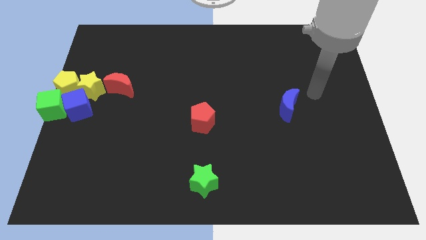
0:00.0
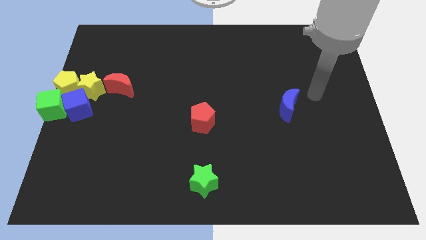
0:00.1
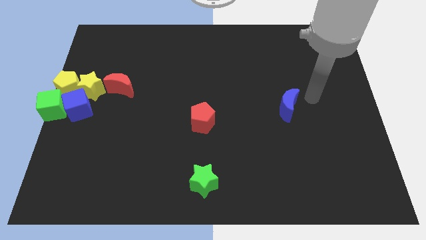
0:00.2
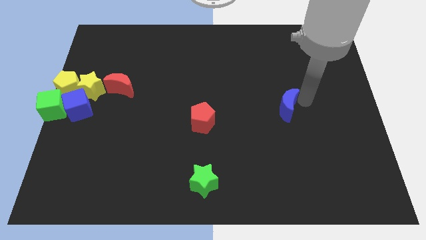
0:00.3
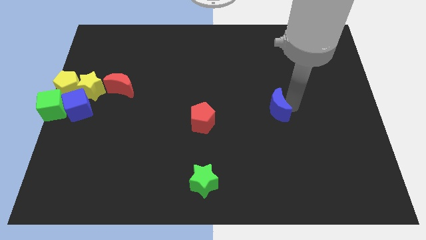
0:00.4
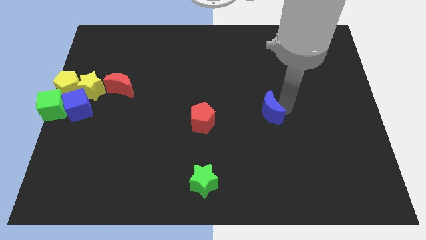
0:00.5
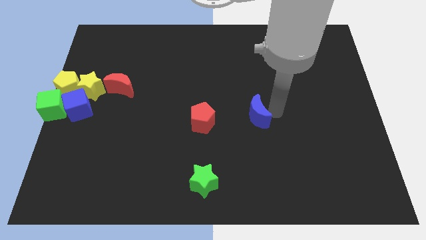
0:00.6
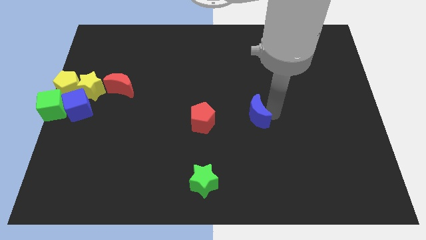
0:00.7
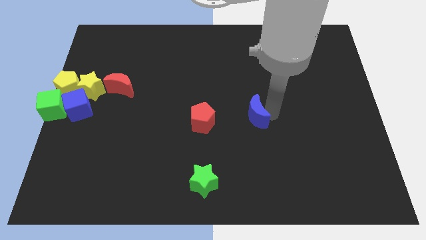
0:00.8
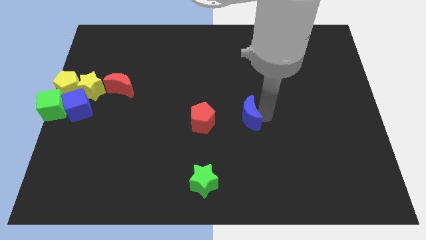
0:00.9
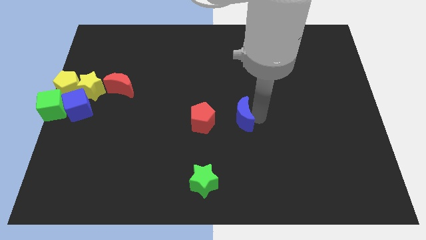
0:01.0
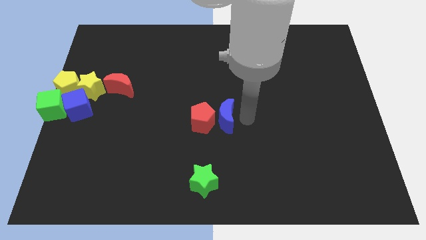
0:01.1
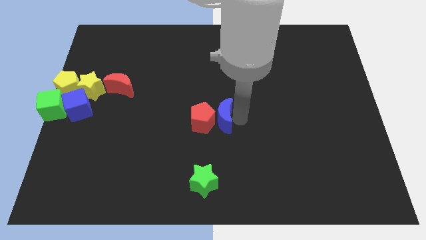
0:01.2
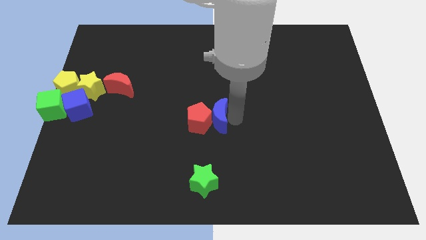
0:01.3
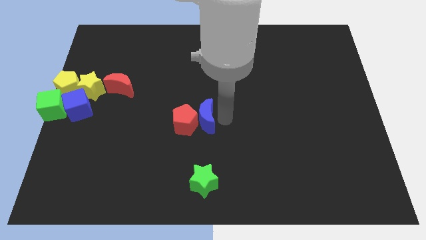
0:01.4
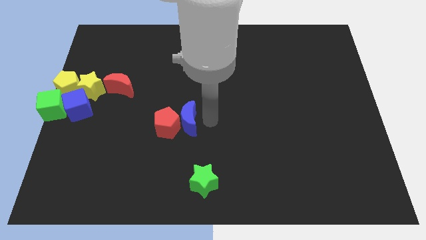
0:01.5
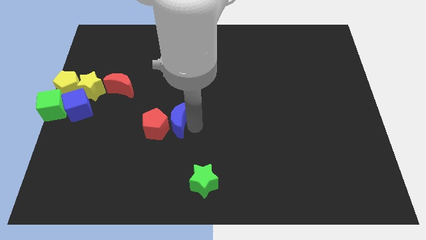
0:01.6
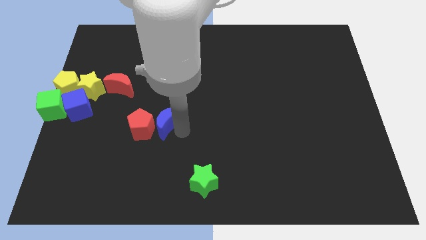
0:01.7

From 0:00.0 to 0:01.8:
move the blue moon into the red pentagon

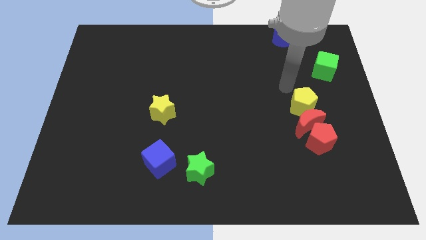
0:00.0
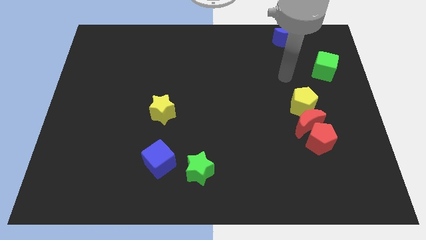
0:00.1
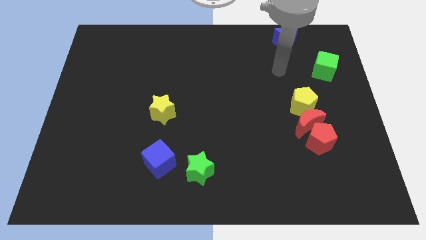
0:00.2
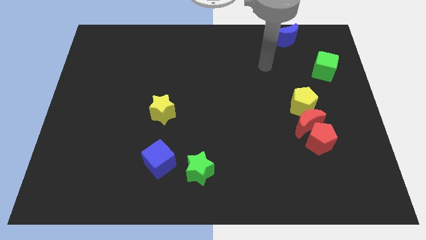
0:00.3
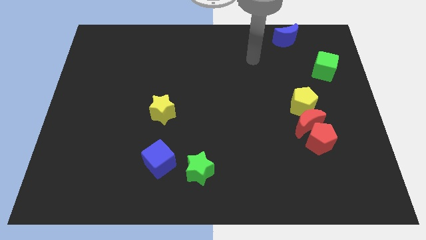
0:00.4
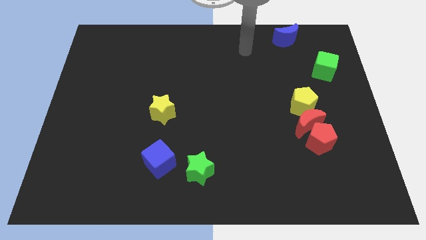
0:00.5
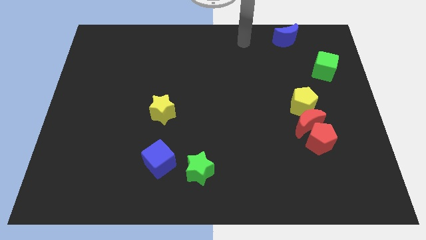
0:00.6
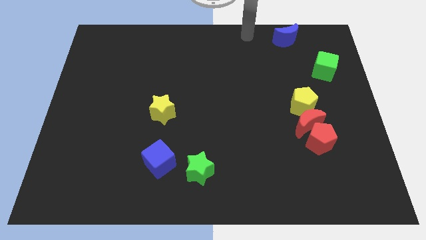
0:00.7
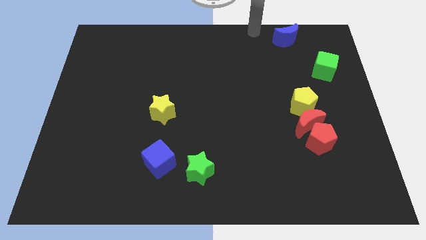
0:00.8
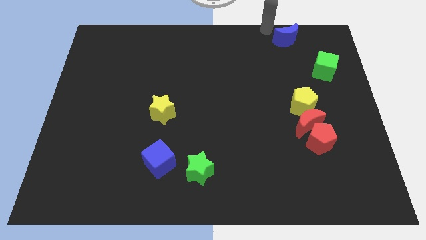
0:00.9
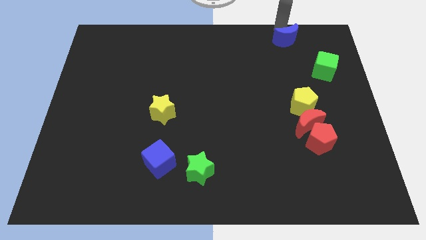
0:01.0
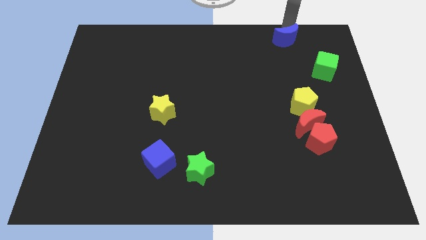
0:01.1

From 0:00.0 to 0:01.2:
move your arm towards the top of the blue crescent

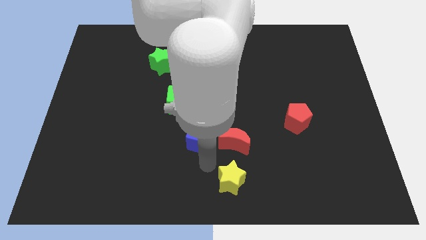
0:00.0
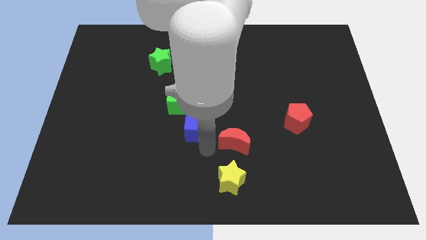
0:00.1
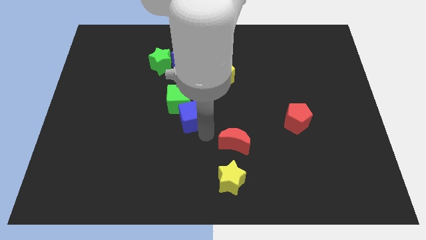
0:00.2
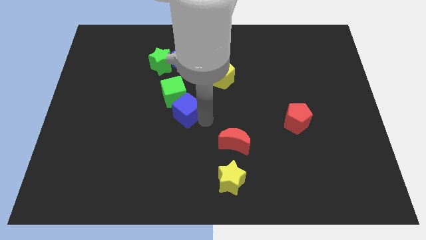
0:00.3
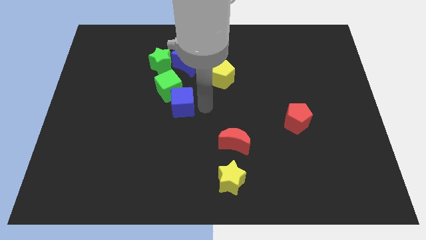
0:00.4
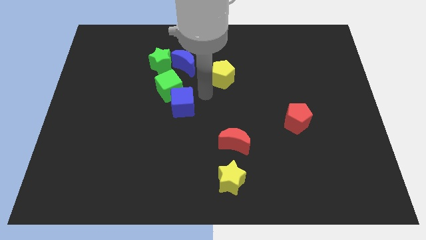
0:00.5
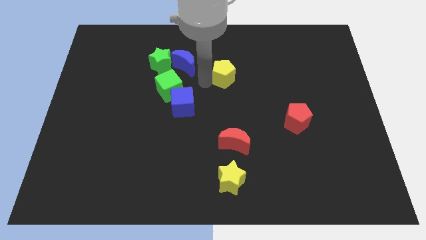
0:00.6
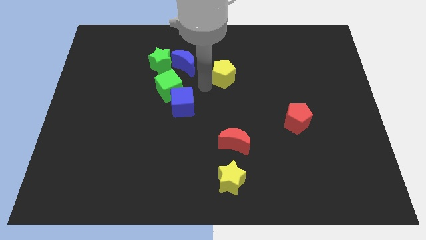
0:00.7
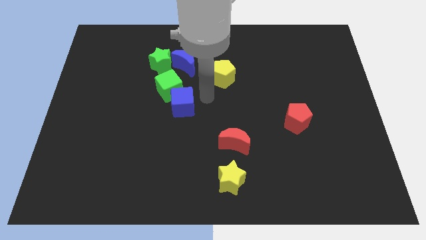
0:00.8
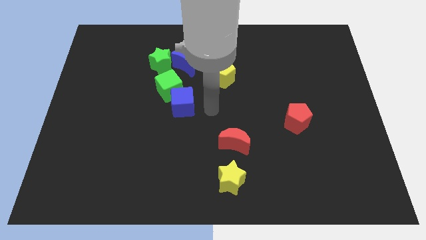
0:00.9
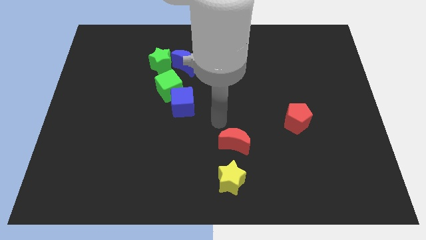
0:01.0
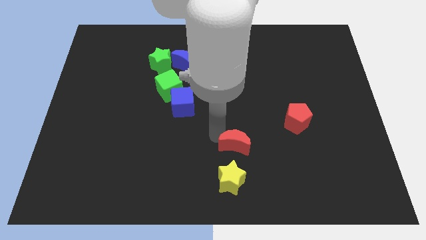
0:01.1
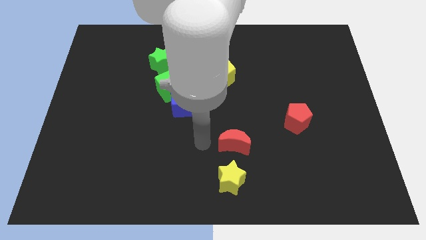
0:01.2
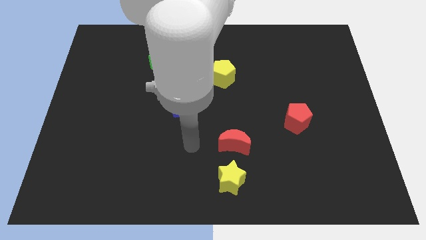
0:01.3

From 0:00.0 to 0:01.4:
push the blue cube into the green cube

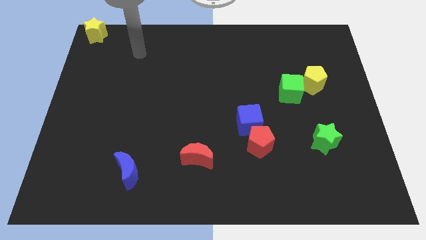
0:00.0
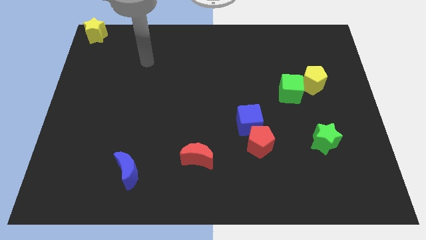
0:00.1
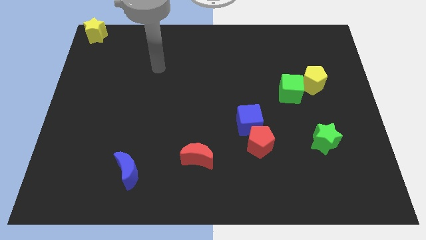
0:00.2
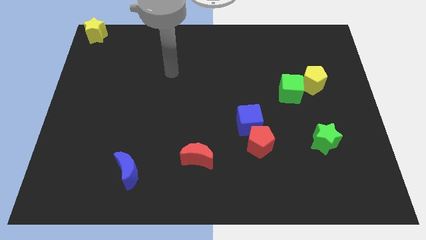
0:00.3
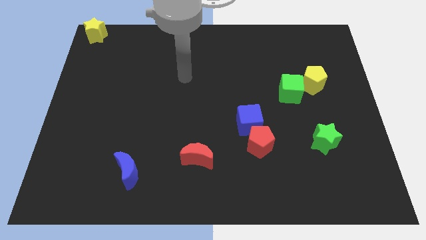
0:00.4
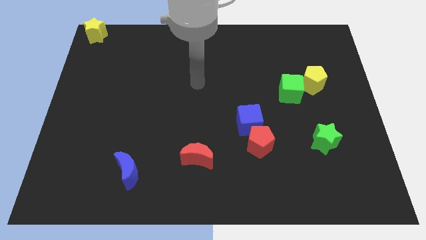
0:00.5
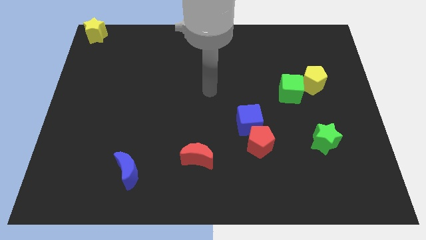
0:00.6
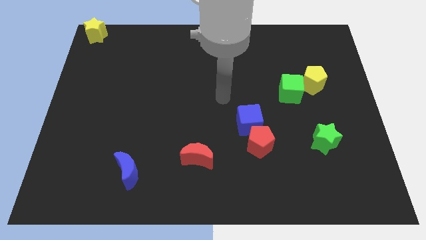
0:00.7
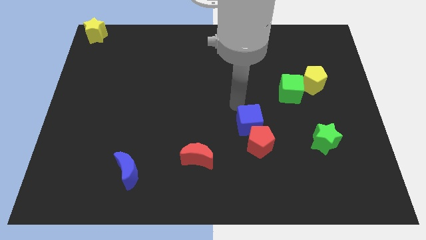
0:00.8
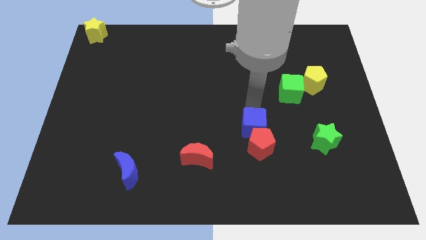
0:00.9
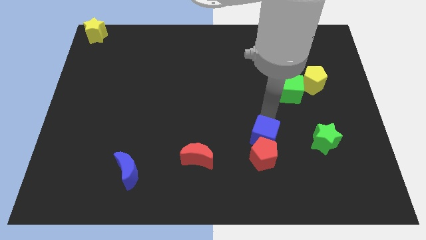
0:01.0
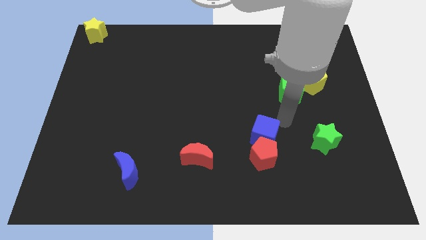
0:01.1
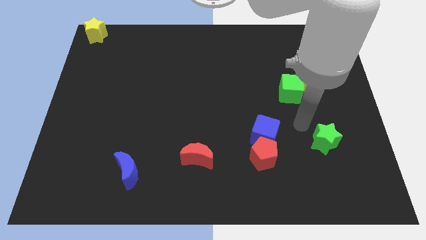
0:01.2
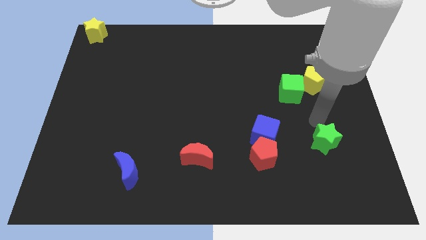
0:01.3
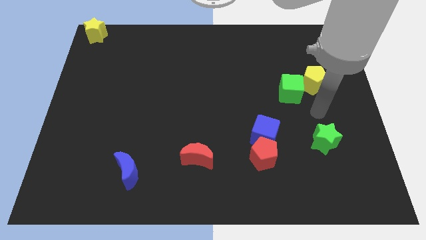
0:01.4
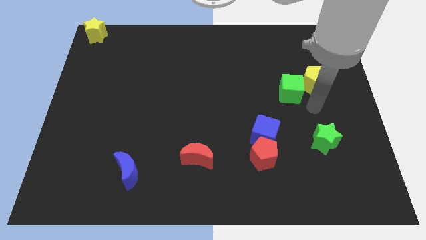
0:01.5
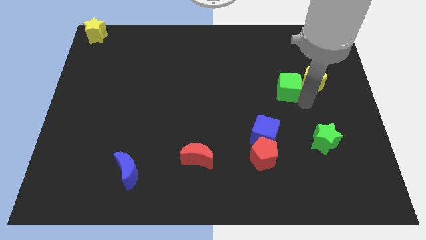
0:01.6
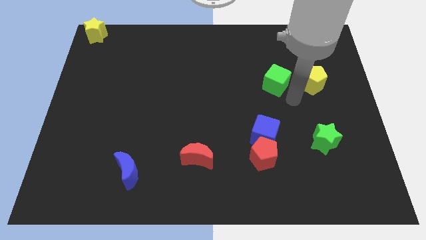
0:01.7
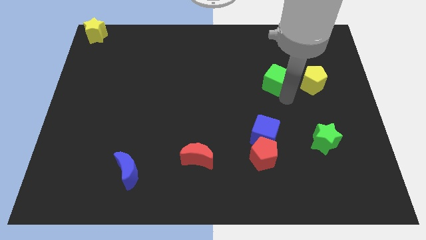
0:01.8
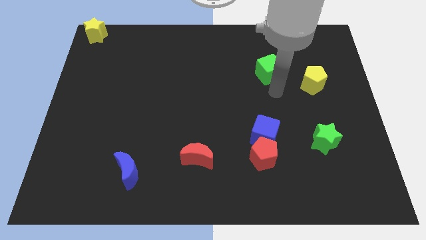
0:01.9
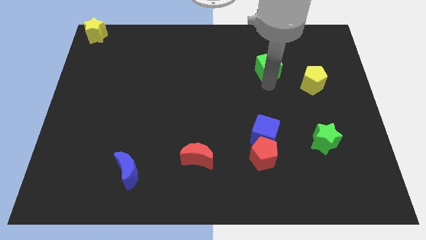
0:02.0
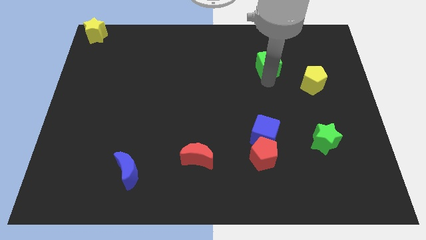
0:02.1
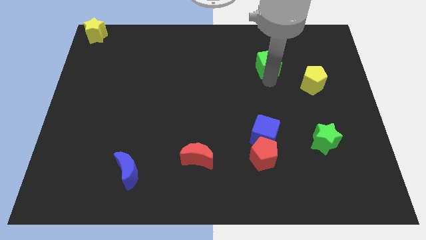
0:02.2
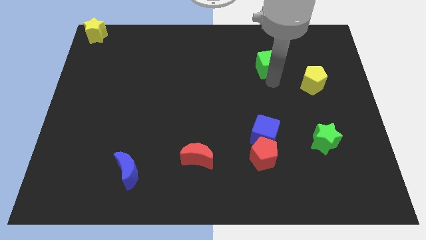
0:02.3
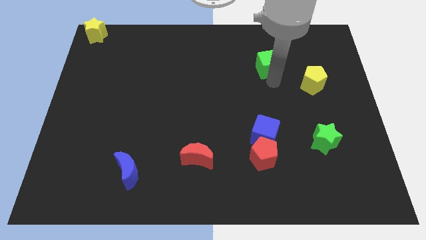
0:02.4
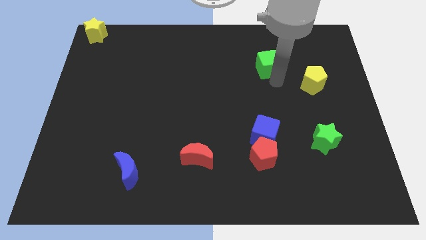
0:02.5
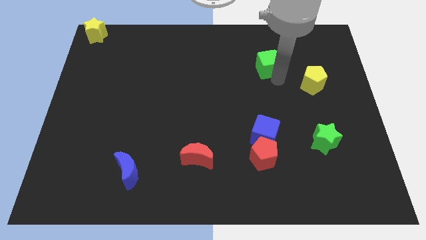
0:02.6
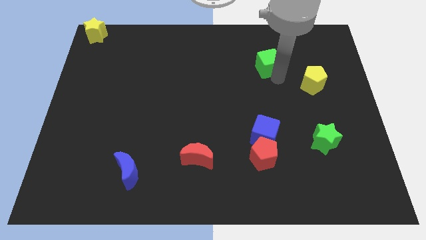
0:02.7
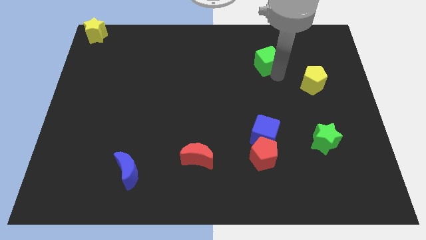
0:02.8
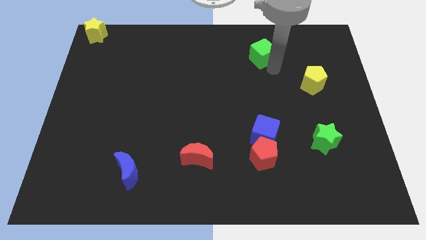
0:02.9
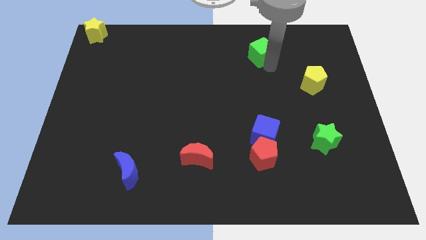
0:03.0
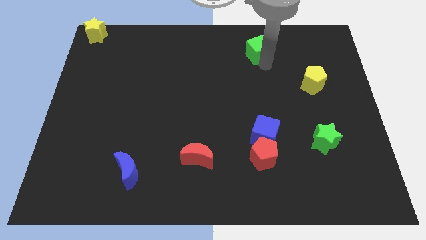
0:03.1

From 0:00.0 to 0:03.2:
place the green cube above the blue cube

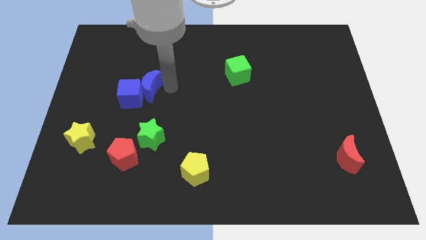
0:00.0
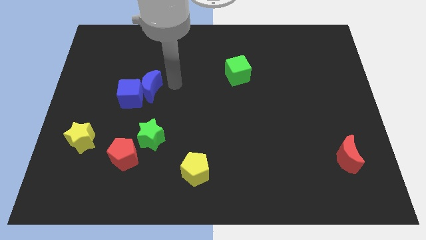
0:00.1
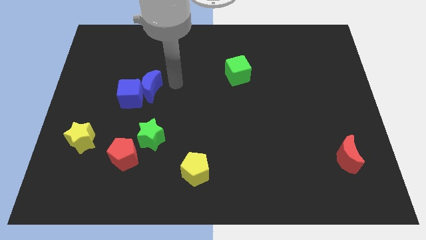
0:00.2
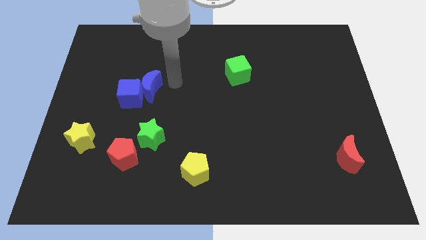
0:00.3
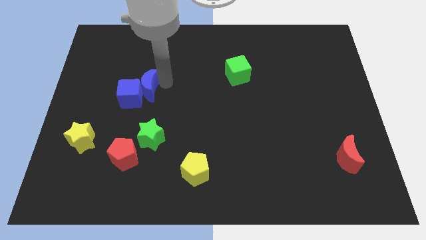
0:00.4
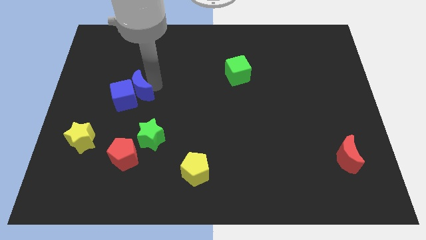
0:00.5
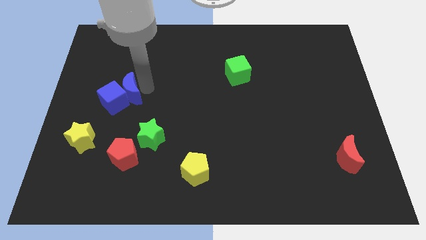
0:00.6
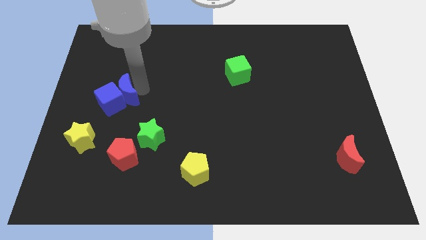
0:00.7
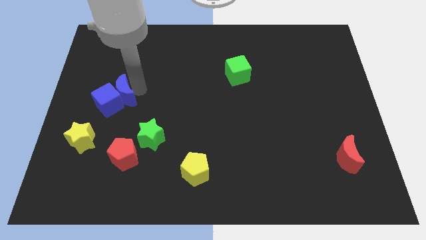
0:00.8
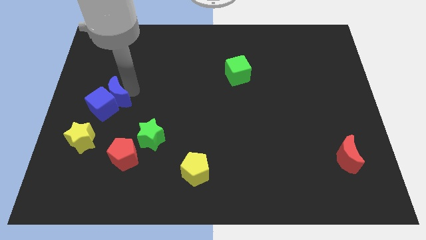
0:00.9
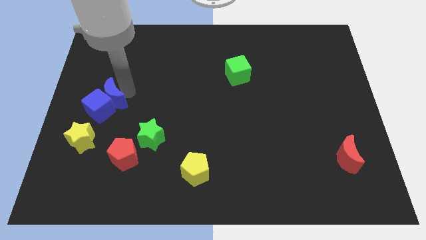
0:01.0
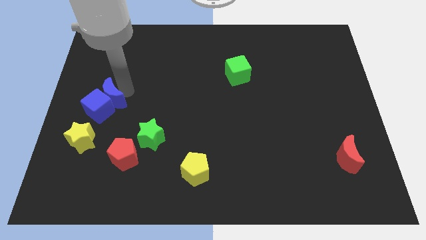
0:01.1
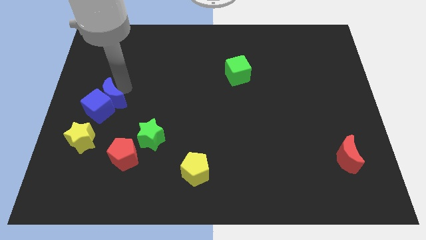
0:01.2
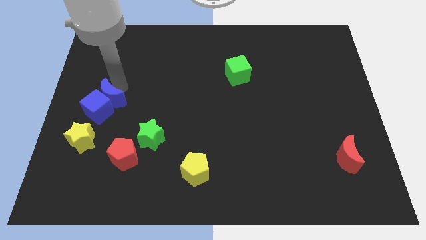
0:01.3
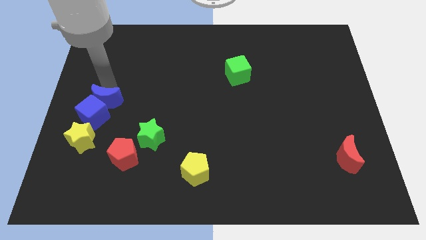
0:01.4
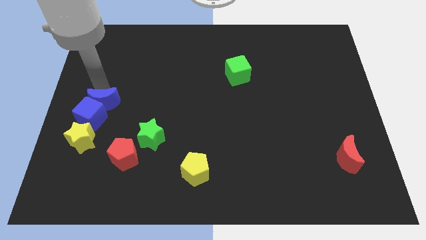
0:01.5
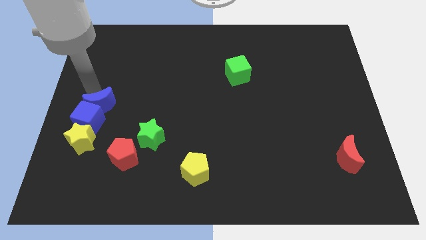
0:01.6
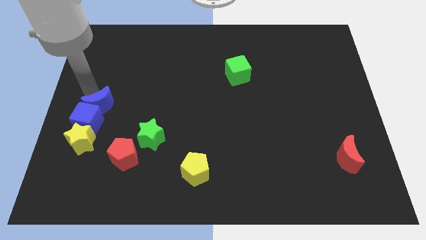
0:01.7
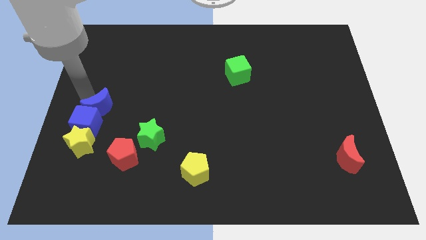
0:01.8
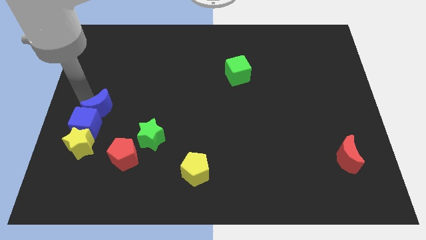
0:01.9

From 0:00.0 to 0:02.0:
push the blue moon to the top side of the blue cube
